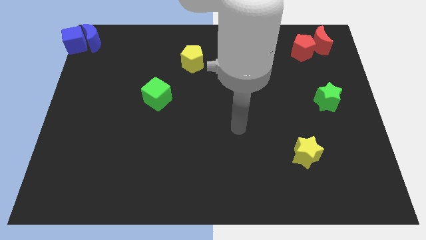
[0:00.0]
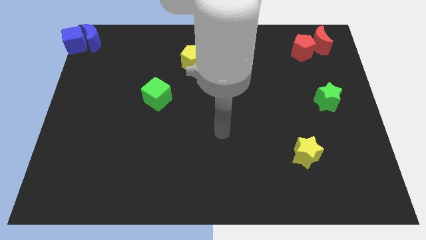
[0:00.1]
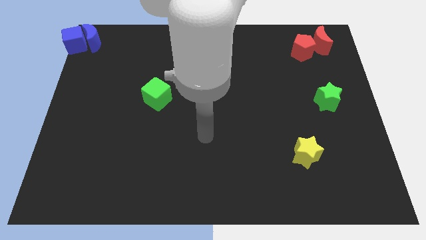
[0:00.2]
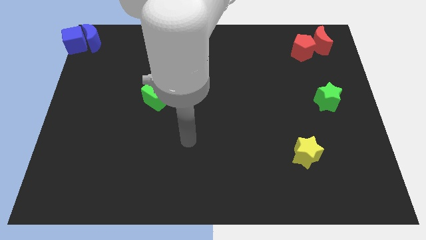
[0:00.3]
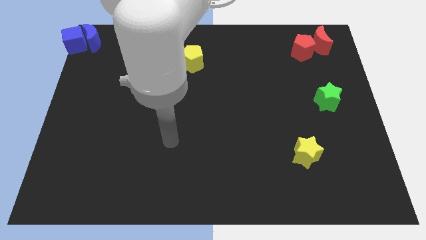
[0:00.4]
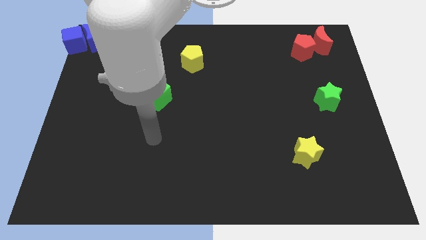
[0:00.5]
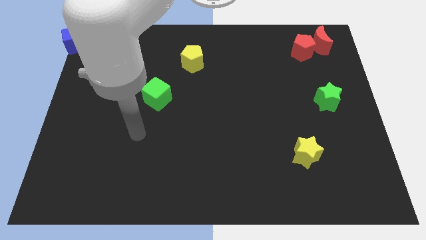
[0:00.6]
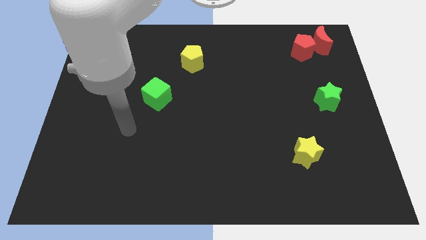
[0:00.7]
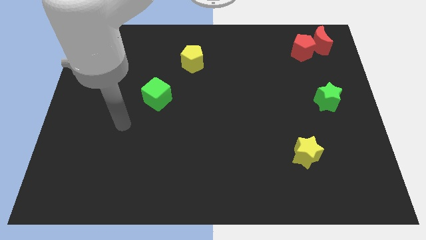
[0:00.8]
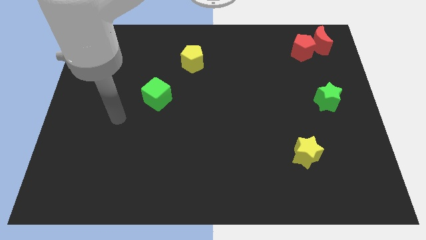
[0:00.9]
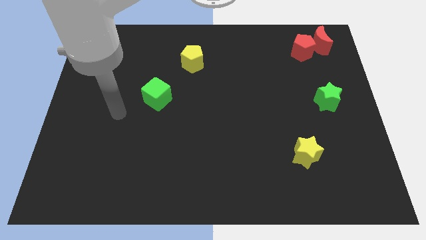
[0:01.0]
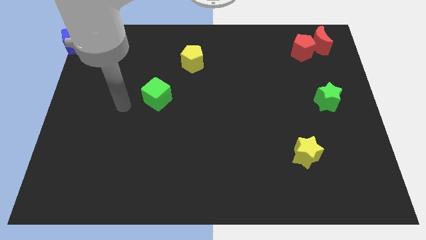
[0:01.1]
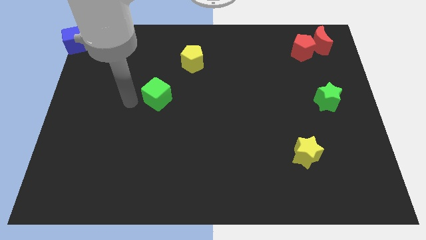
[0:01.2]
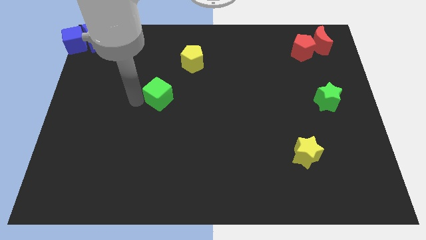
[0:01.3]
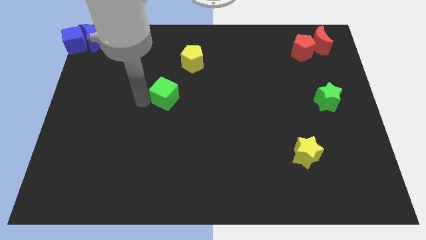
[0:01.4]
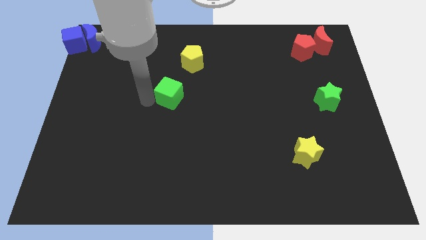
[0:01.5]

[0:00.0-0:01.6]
touch the left side of the green cube

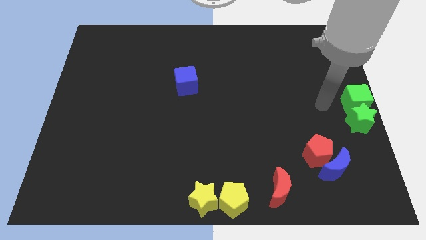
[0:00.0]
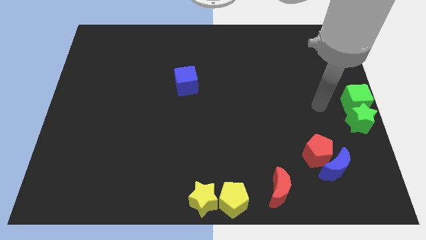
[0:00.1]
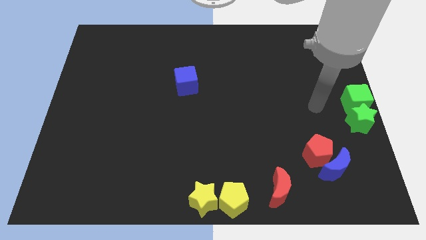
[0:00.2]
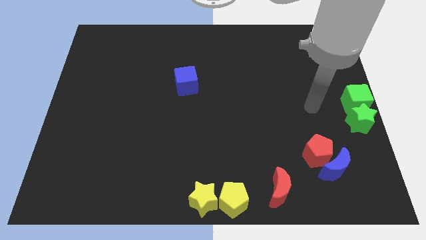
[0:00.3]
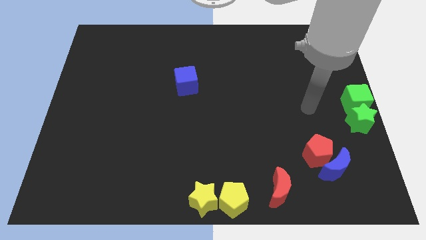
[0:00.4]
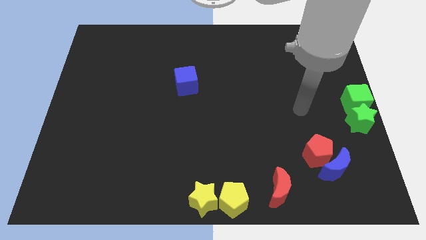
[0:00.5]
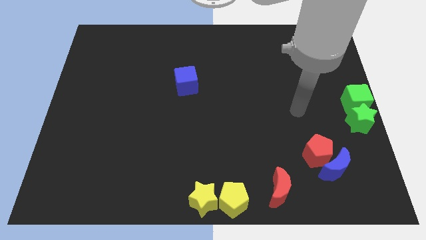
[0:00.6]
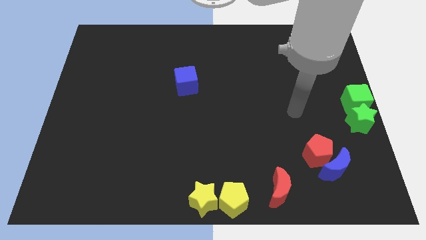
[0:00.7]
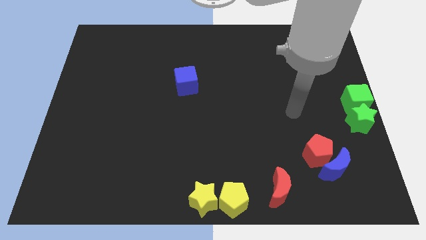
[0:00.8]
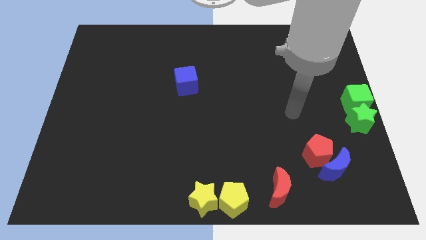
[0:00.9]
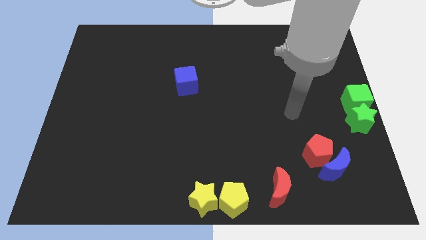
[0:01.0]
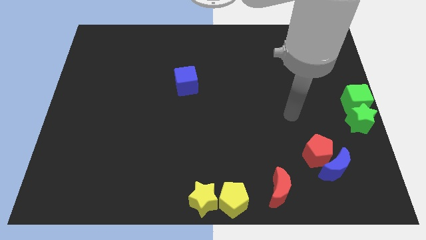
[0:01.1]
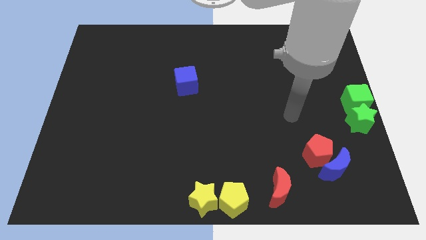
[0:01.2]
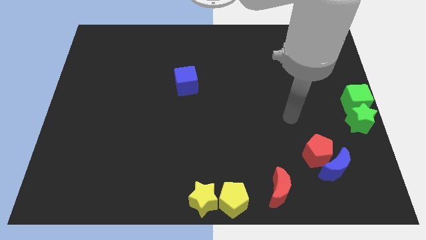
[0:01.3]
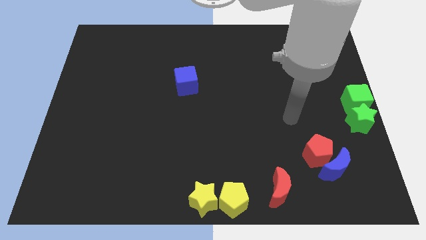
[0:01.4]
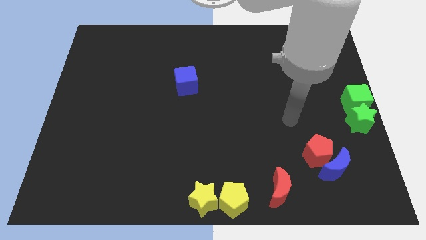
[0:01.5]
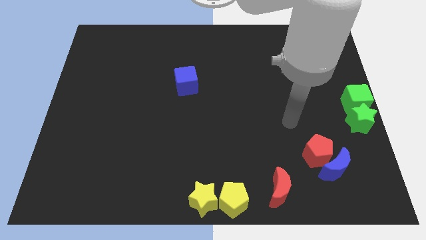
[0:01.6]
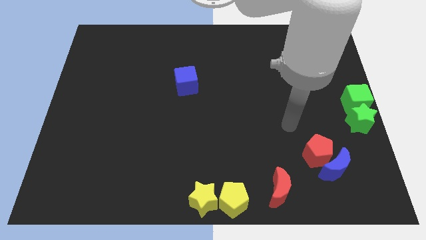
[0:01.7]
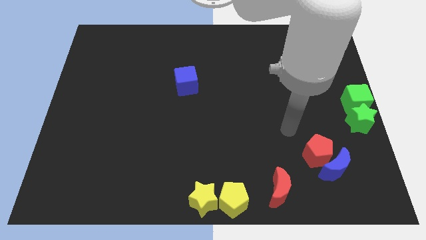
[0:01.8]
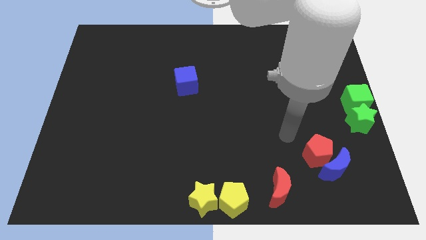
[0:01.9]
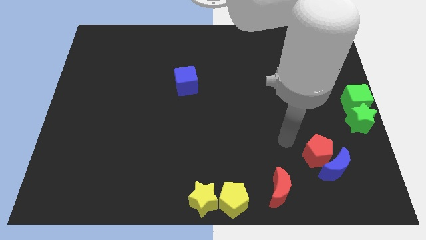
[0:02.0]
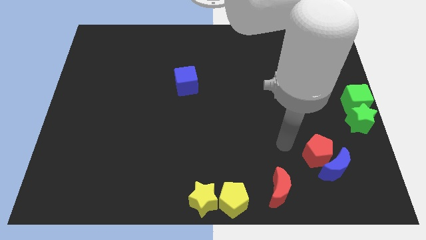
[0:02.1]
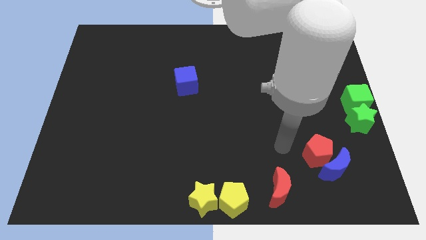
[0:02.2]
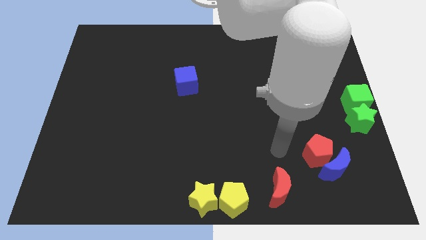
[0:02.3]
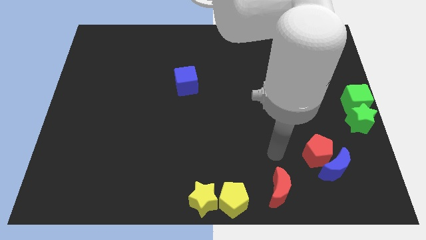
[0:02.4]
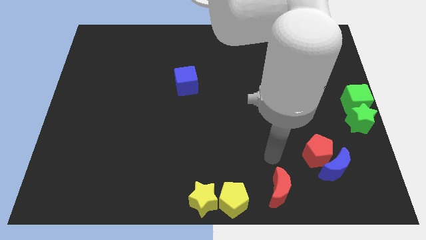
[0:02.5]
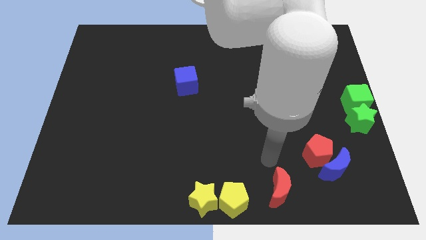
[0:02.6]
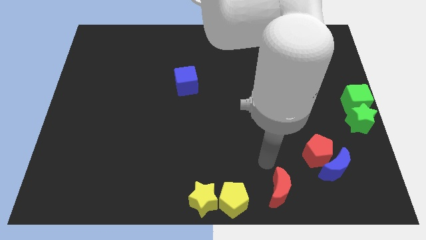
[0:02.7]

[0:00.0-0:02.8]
move your arm to the top of the red crescent

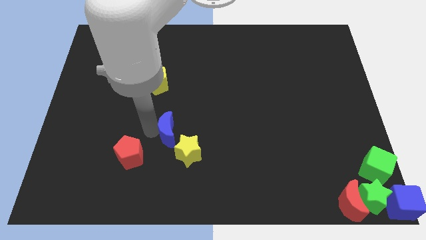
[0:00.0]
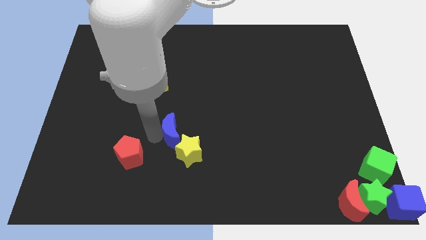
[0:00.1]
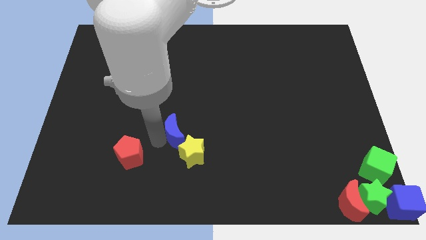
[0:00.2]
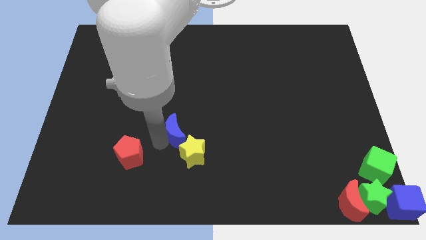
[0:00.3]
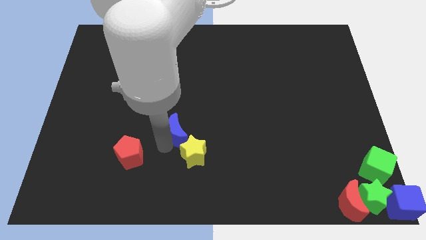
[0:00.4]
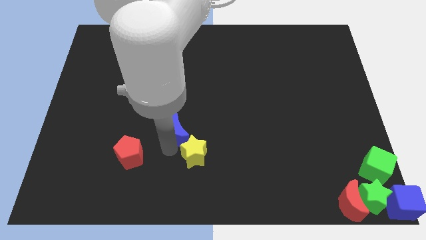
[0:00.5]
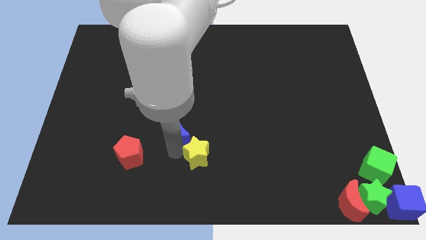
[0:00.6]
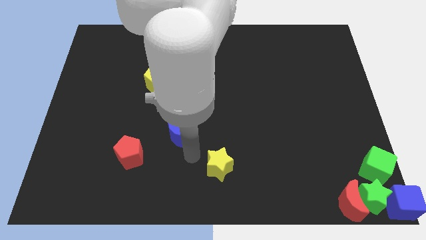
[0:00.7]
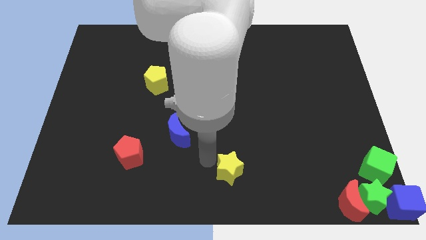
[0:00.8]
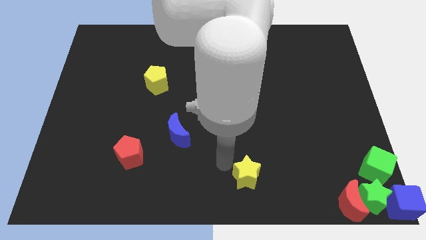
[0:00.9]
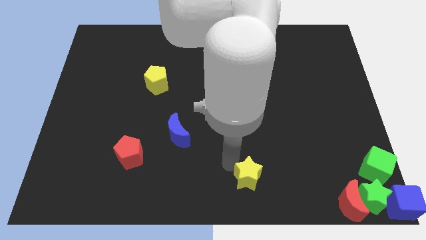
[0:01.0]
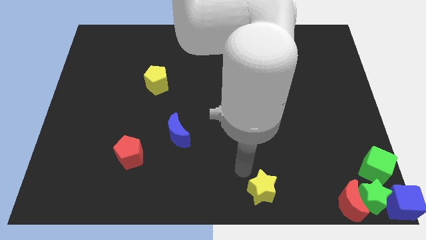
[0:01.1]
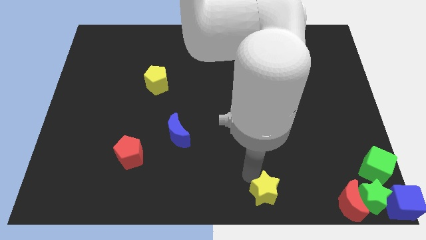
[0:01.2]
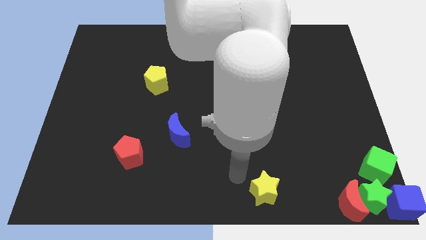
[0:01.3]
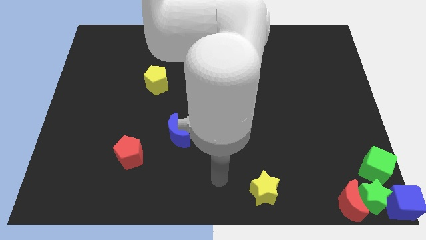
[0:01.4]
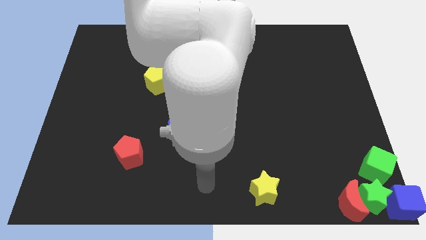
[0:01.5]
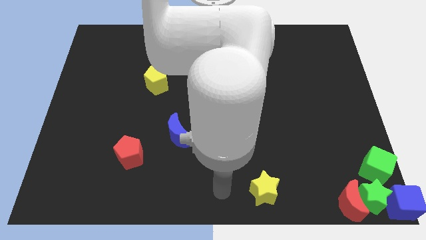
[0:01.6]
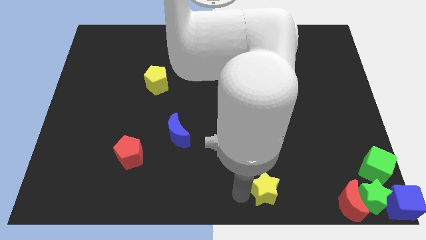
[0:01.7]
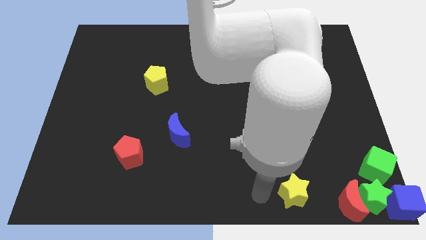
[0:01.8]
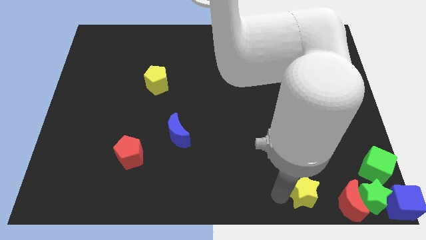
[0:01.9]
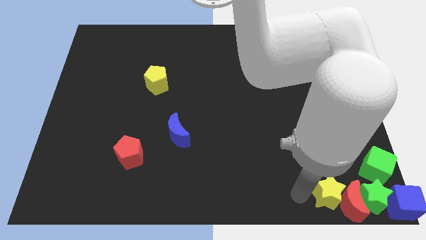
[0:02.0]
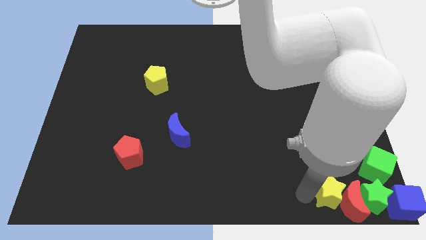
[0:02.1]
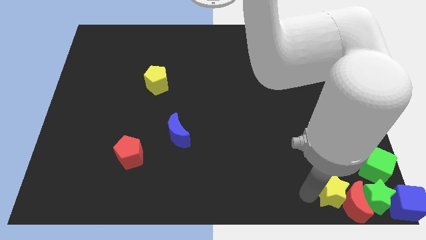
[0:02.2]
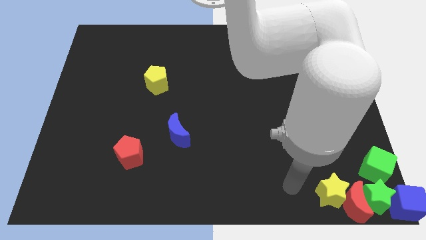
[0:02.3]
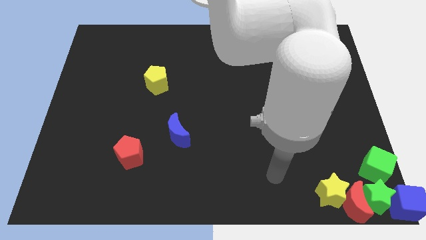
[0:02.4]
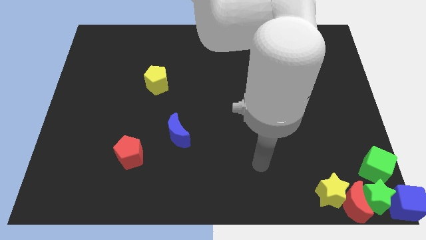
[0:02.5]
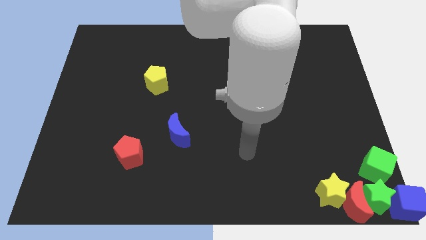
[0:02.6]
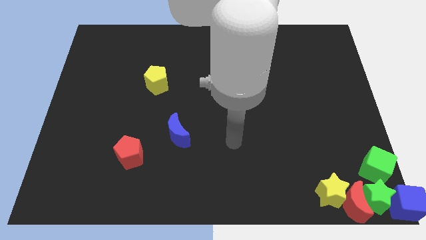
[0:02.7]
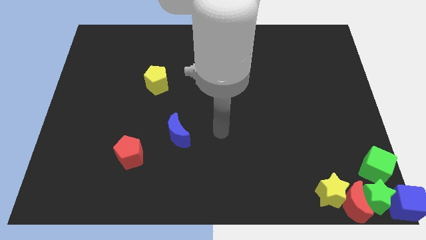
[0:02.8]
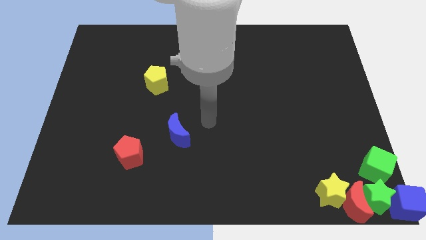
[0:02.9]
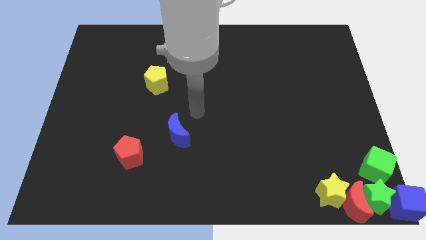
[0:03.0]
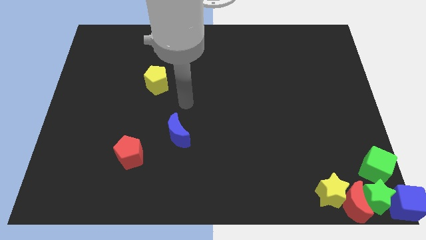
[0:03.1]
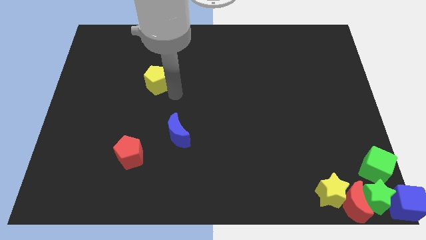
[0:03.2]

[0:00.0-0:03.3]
push the yellow star to the left side of the red crescent

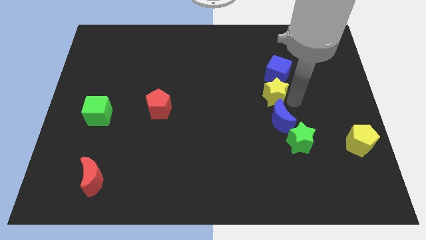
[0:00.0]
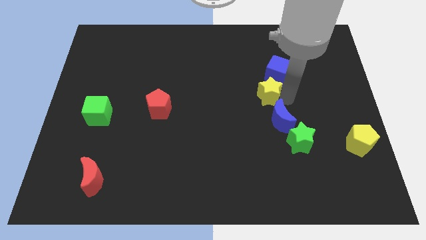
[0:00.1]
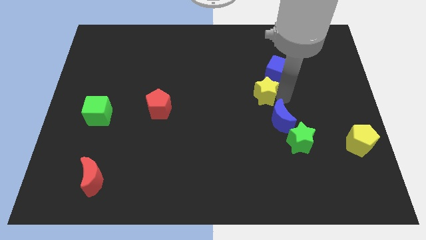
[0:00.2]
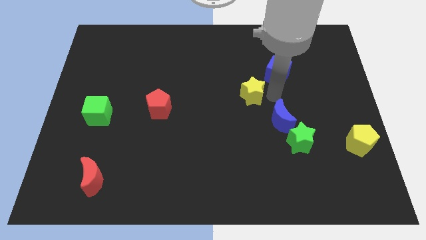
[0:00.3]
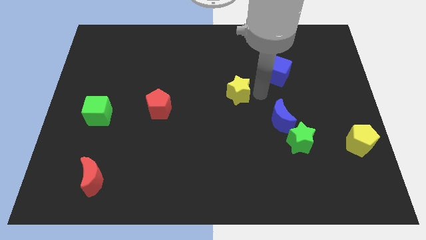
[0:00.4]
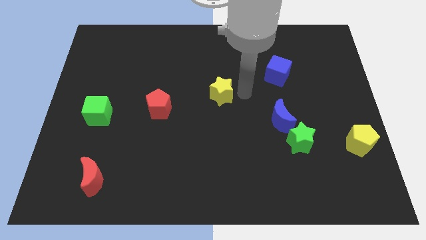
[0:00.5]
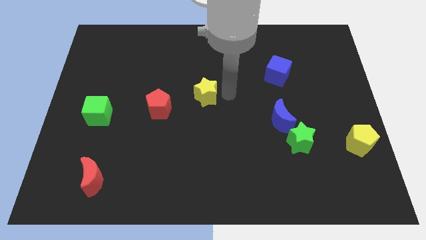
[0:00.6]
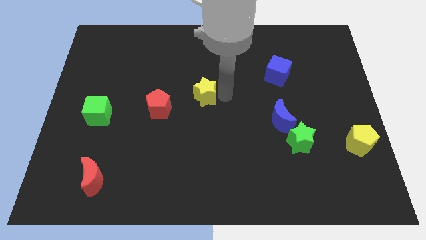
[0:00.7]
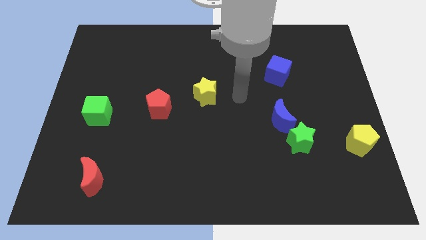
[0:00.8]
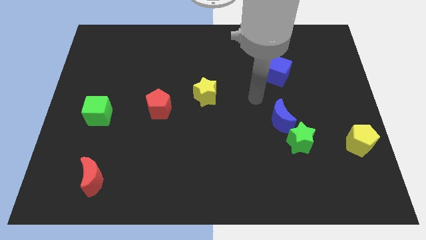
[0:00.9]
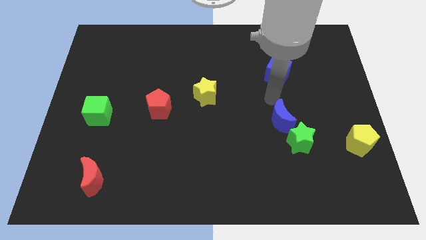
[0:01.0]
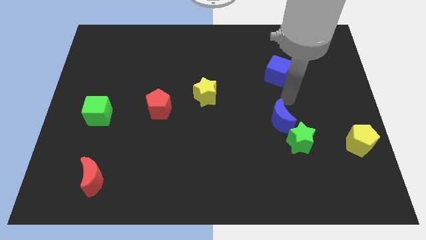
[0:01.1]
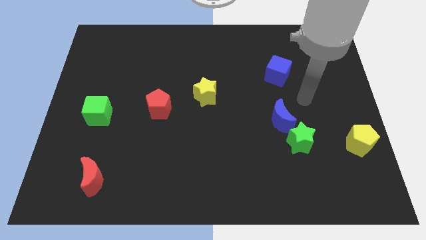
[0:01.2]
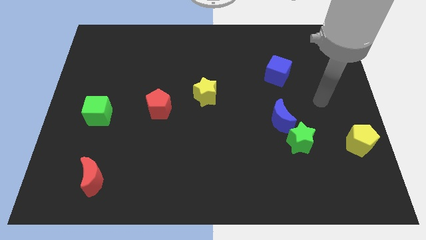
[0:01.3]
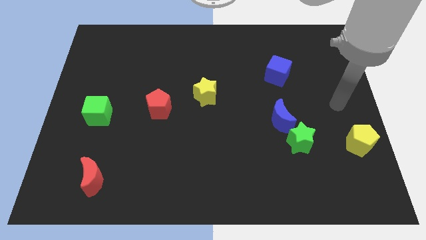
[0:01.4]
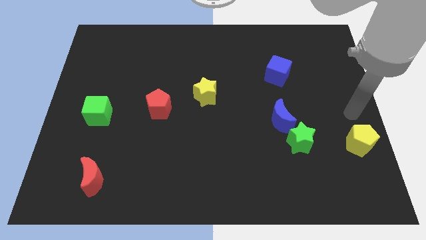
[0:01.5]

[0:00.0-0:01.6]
separate the yellow star from the blue cube
